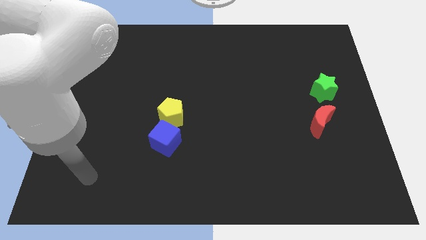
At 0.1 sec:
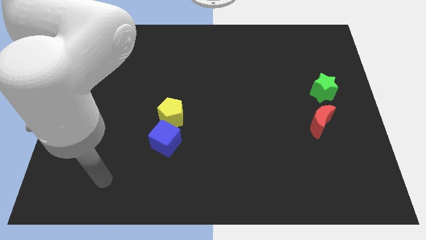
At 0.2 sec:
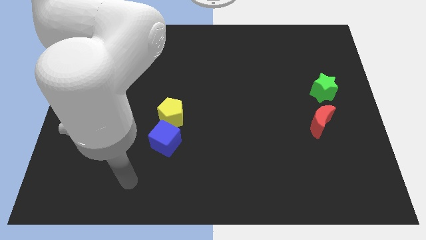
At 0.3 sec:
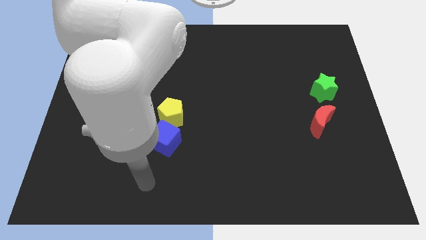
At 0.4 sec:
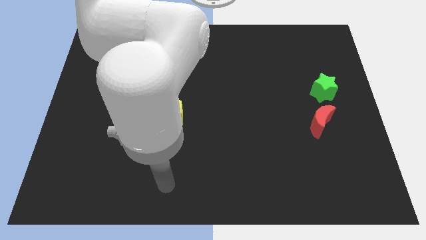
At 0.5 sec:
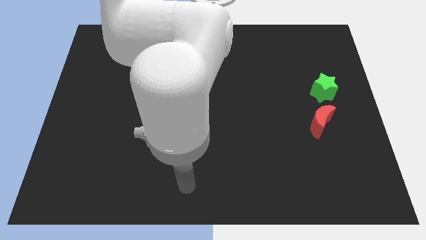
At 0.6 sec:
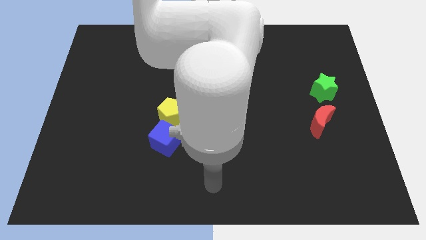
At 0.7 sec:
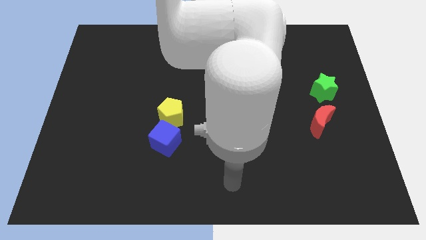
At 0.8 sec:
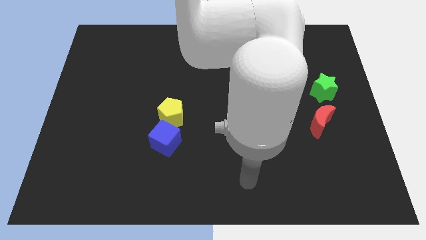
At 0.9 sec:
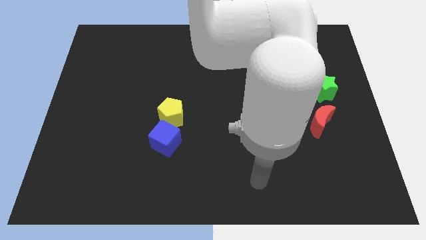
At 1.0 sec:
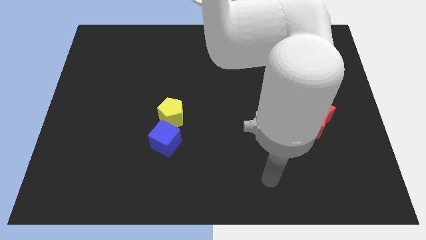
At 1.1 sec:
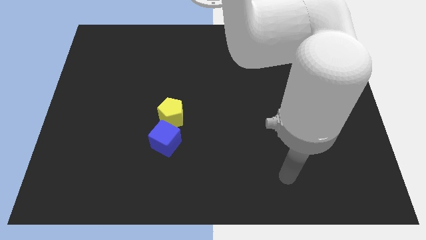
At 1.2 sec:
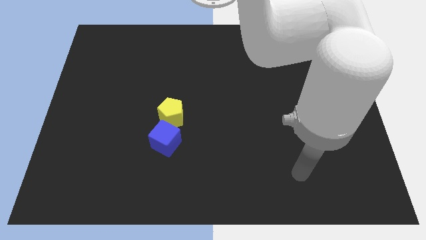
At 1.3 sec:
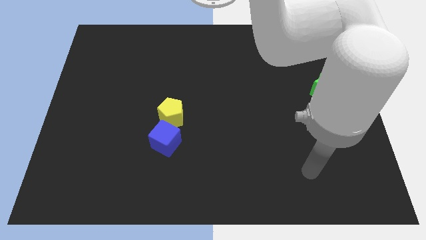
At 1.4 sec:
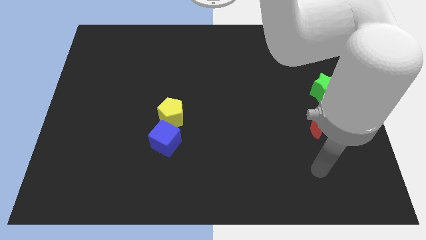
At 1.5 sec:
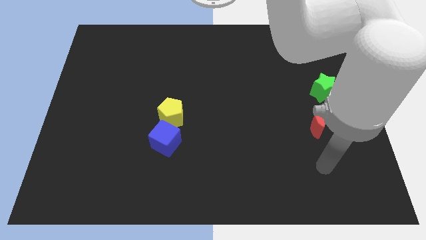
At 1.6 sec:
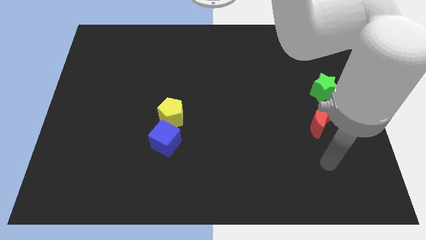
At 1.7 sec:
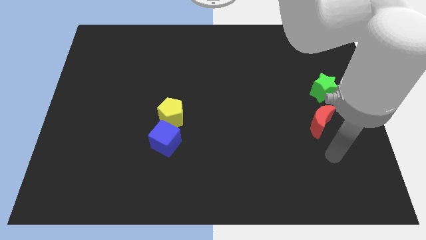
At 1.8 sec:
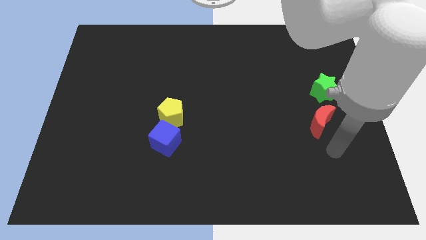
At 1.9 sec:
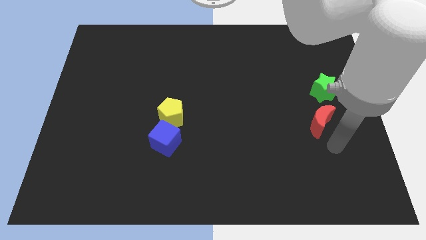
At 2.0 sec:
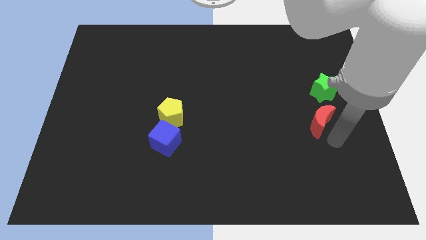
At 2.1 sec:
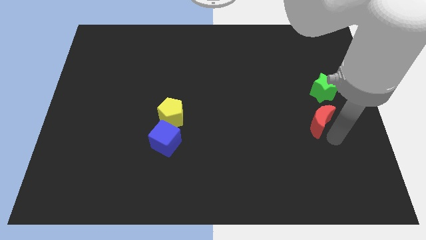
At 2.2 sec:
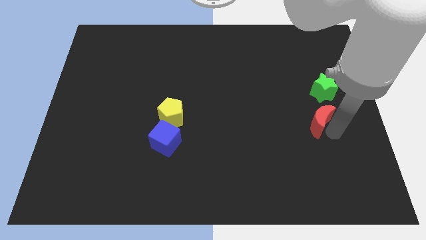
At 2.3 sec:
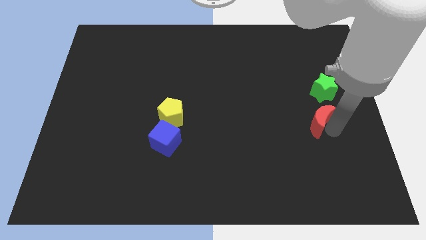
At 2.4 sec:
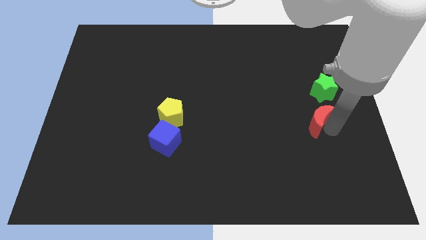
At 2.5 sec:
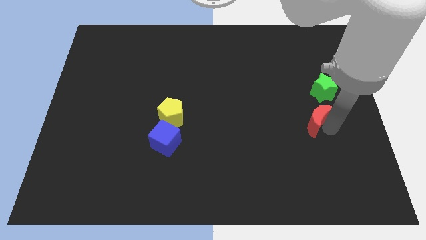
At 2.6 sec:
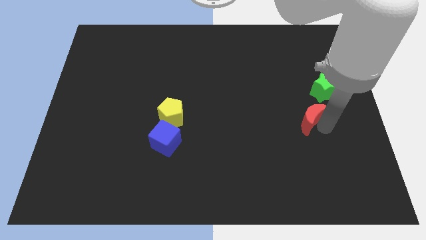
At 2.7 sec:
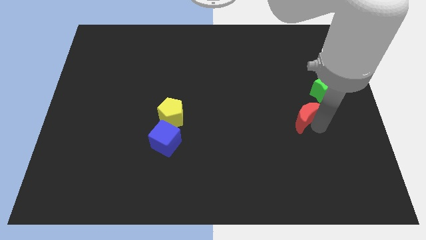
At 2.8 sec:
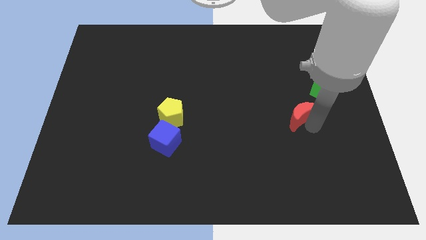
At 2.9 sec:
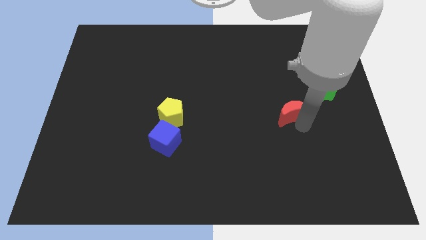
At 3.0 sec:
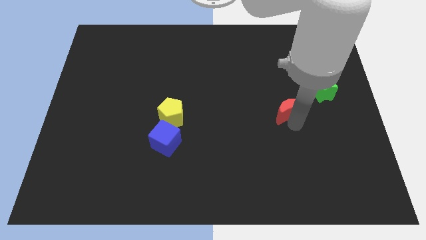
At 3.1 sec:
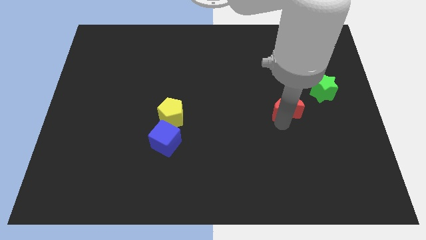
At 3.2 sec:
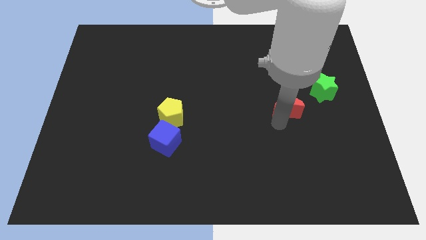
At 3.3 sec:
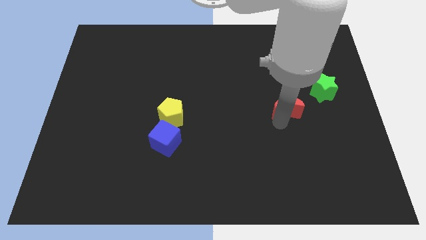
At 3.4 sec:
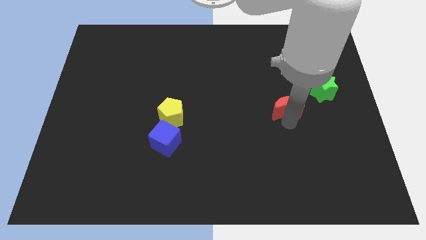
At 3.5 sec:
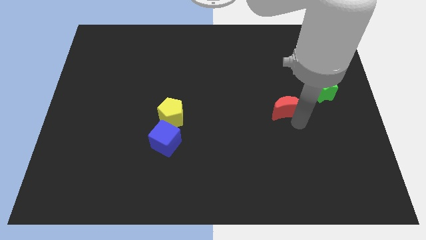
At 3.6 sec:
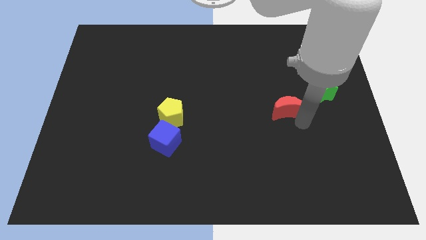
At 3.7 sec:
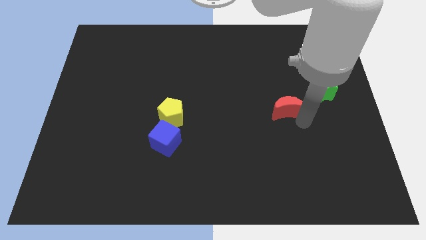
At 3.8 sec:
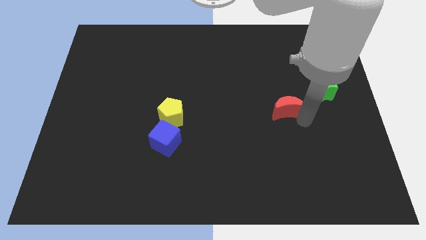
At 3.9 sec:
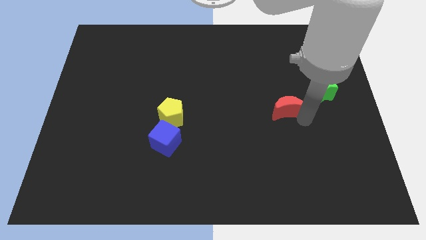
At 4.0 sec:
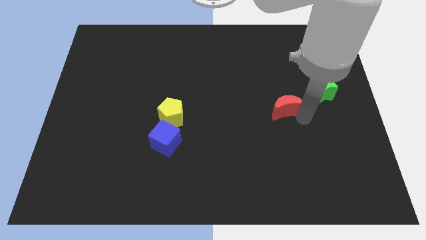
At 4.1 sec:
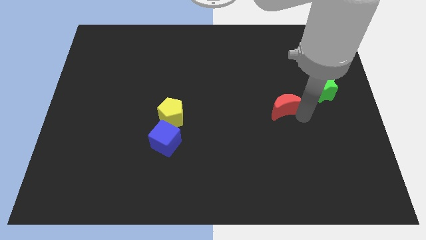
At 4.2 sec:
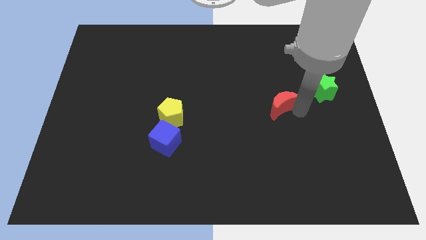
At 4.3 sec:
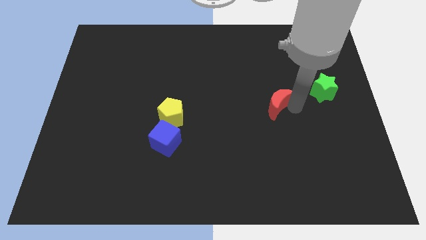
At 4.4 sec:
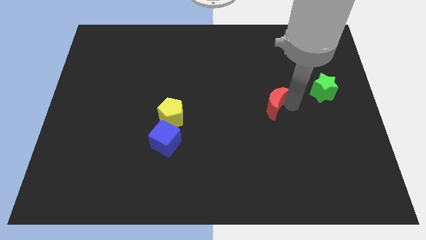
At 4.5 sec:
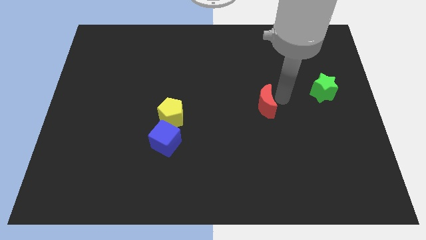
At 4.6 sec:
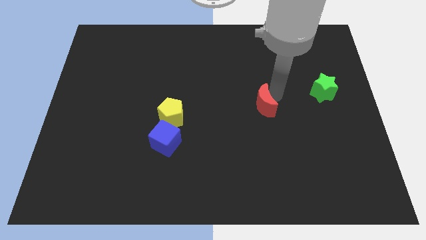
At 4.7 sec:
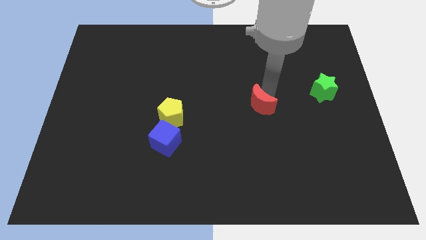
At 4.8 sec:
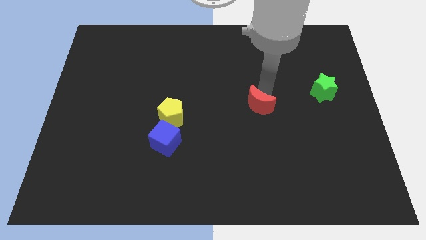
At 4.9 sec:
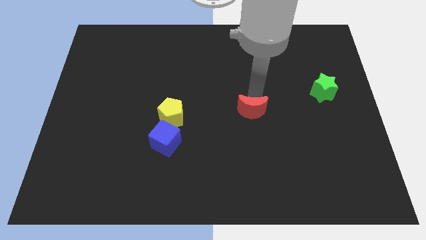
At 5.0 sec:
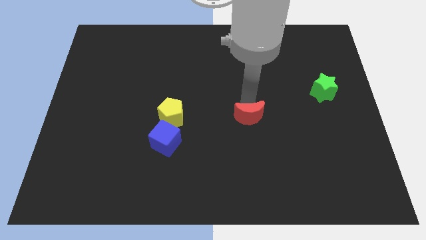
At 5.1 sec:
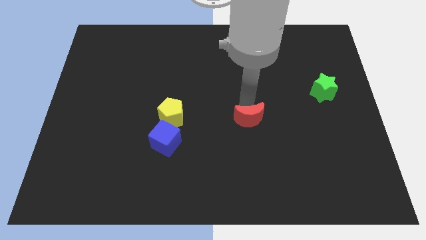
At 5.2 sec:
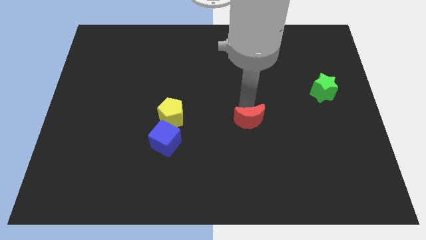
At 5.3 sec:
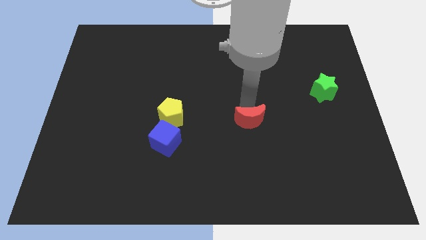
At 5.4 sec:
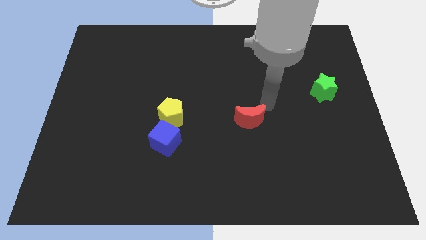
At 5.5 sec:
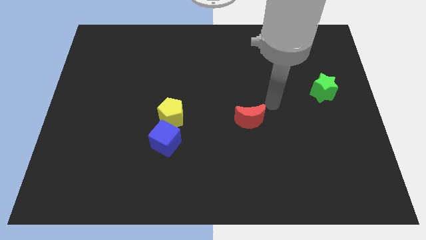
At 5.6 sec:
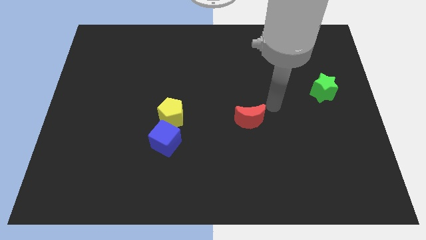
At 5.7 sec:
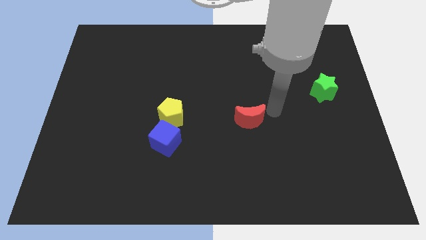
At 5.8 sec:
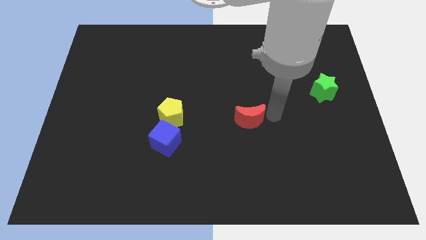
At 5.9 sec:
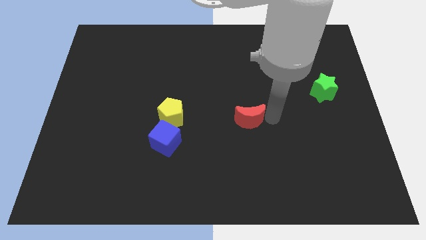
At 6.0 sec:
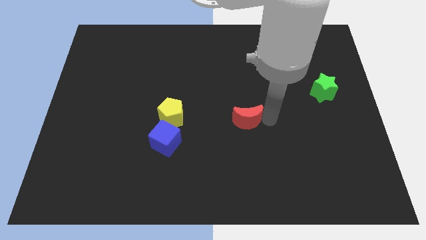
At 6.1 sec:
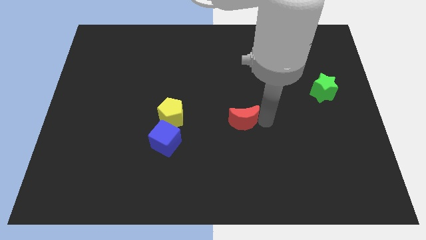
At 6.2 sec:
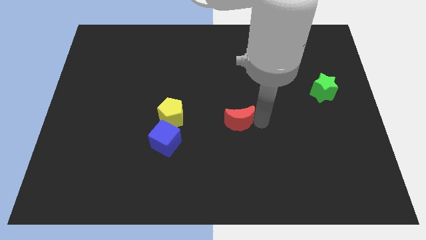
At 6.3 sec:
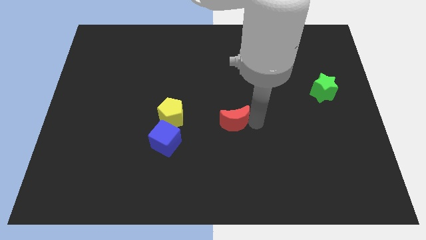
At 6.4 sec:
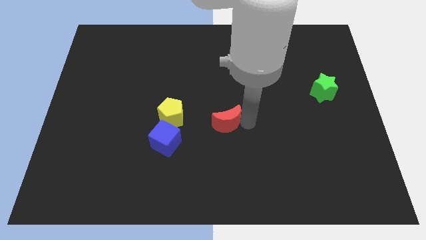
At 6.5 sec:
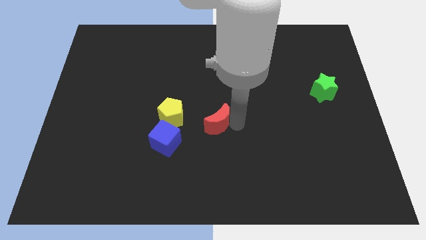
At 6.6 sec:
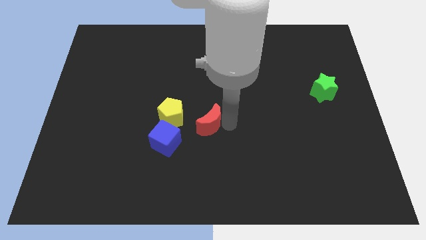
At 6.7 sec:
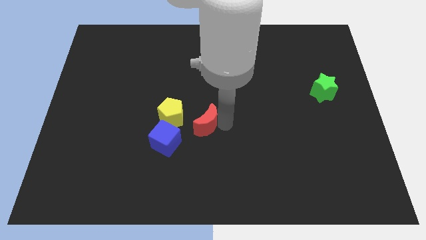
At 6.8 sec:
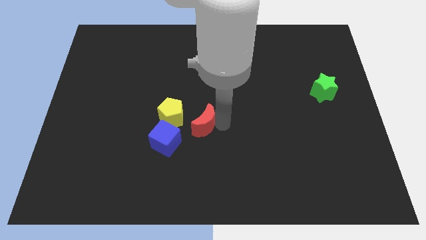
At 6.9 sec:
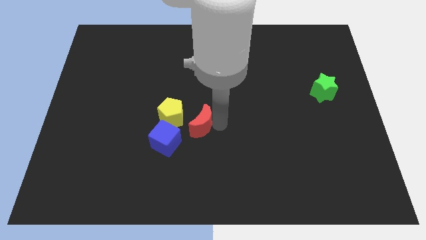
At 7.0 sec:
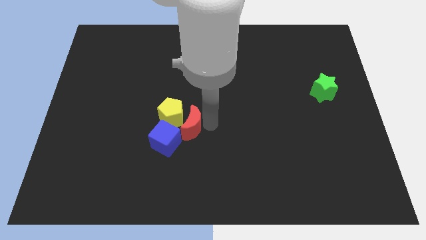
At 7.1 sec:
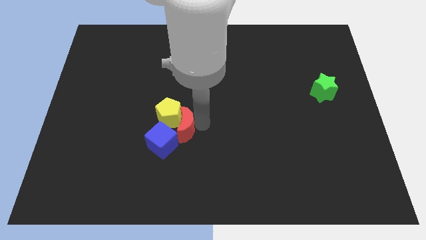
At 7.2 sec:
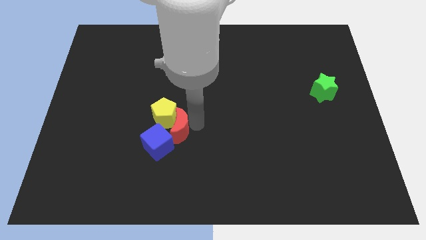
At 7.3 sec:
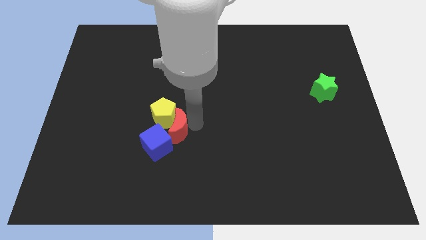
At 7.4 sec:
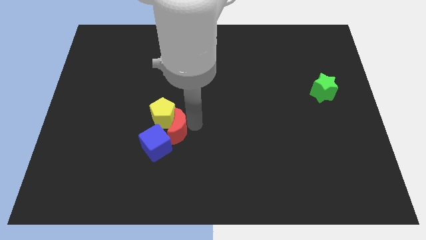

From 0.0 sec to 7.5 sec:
slide the red moon towards the cube

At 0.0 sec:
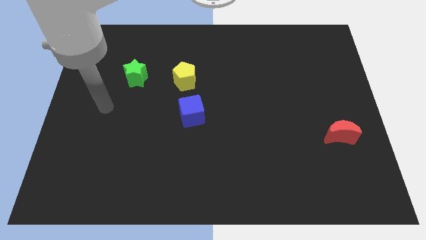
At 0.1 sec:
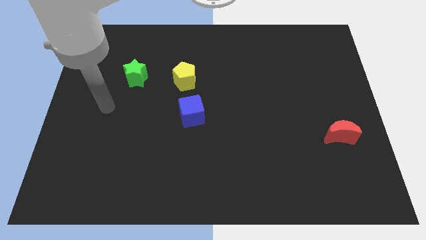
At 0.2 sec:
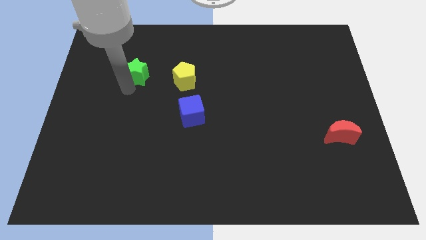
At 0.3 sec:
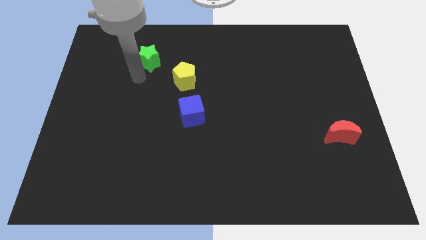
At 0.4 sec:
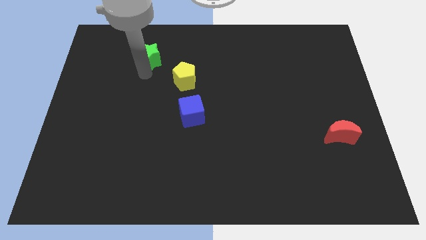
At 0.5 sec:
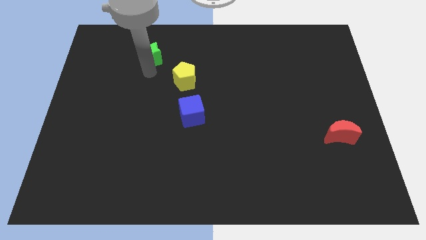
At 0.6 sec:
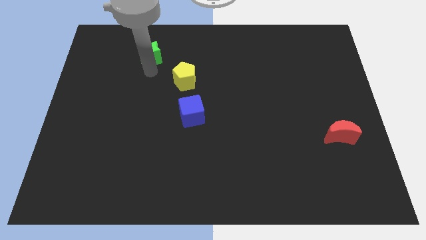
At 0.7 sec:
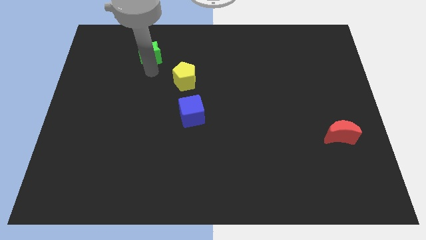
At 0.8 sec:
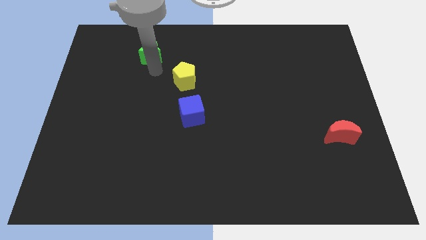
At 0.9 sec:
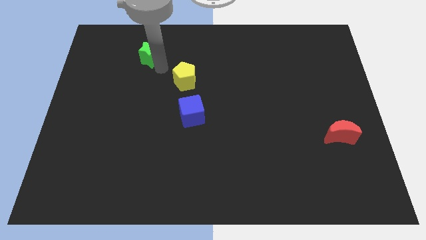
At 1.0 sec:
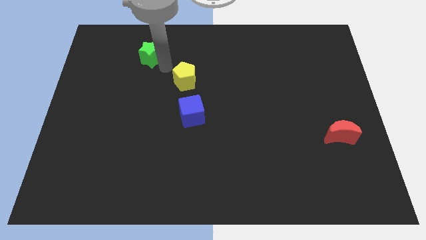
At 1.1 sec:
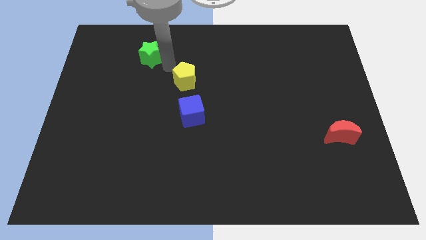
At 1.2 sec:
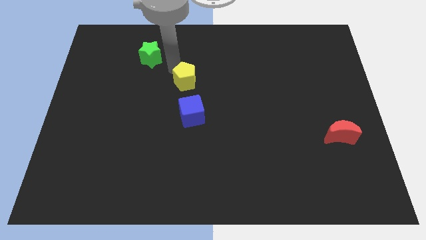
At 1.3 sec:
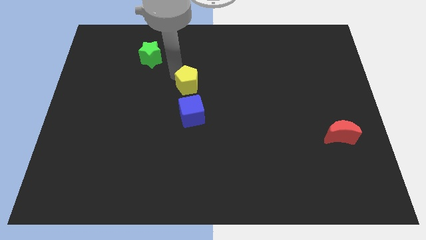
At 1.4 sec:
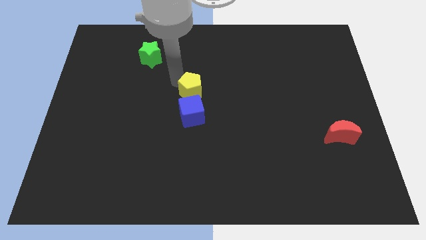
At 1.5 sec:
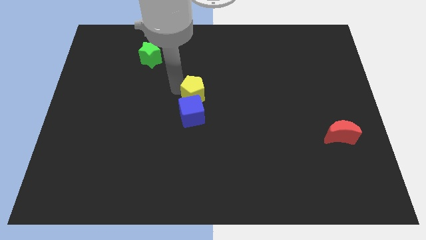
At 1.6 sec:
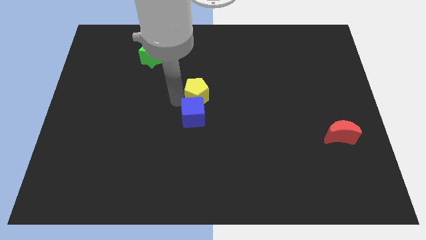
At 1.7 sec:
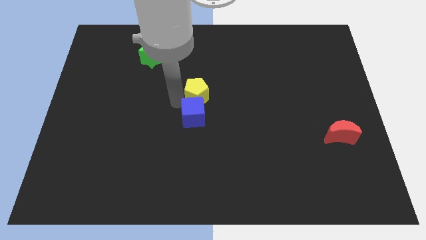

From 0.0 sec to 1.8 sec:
move the yellow block next to the cube
